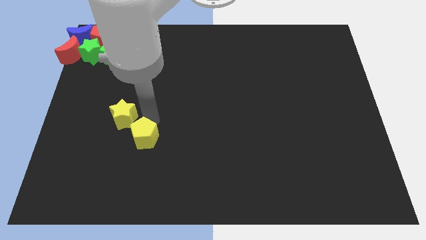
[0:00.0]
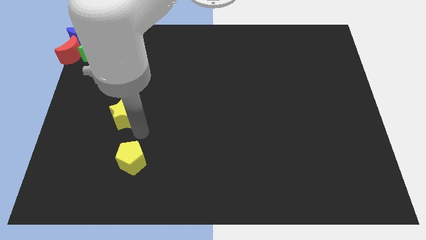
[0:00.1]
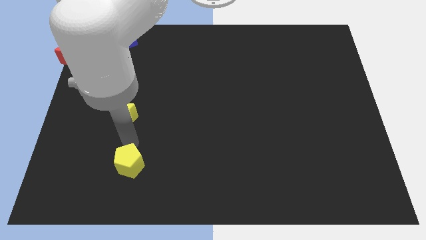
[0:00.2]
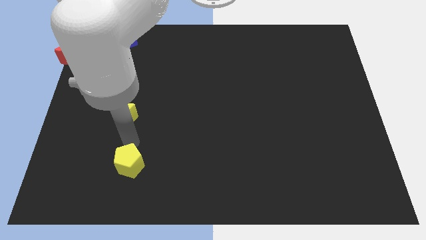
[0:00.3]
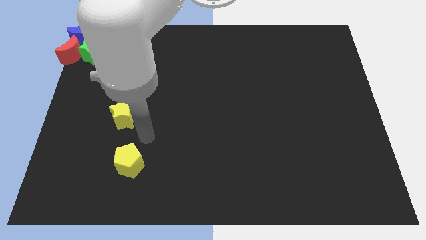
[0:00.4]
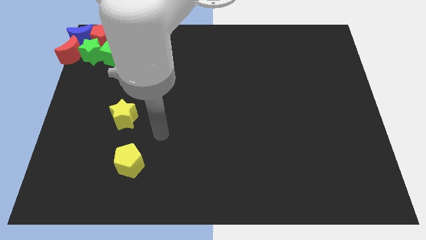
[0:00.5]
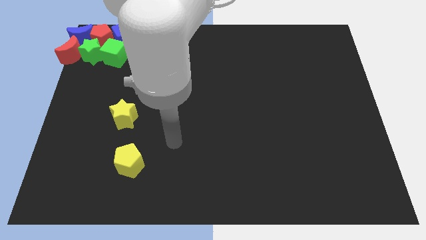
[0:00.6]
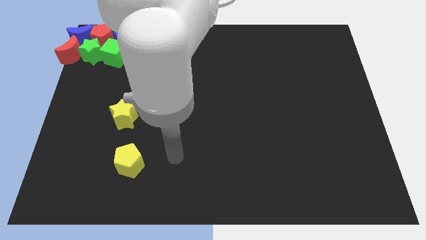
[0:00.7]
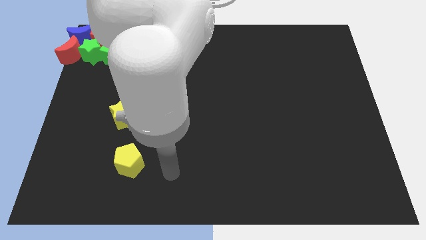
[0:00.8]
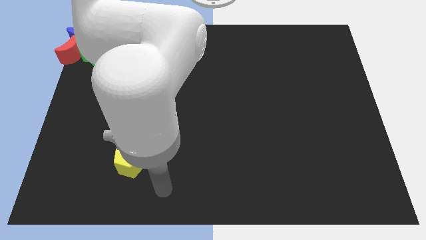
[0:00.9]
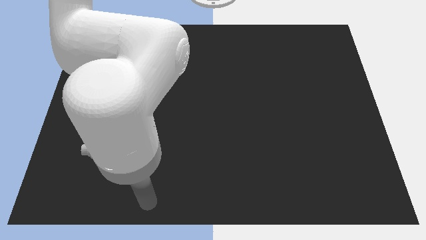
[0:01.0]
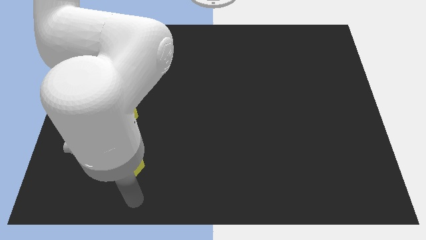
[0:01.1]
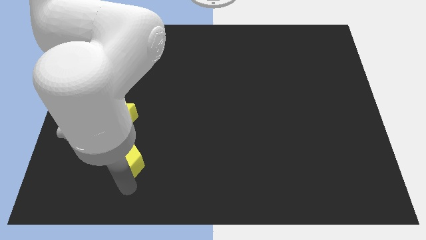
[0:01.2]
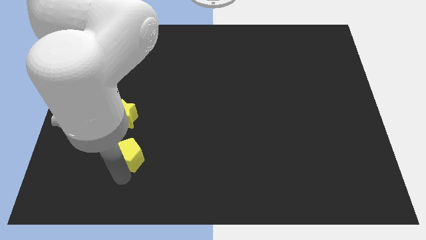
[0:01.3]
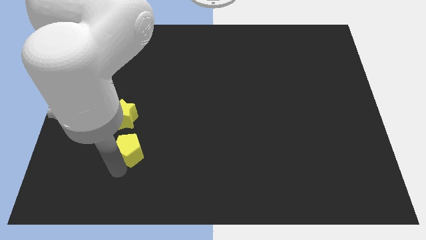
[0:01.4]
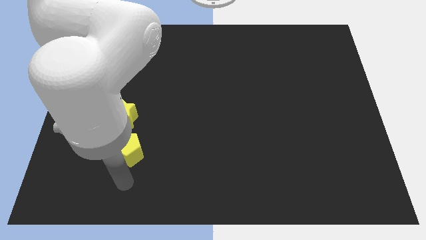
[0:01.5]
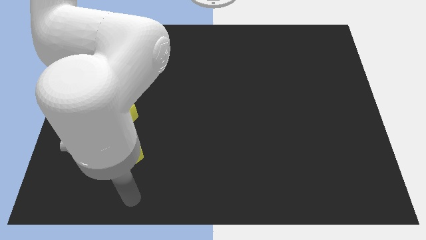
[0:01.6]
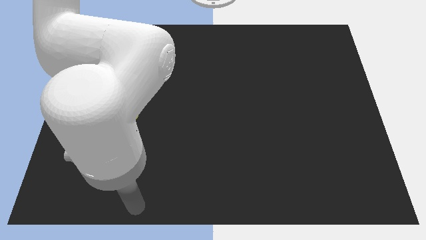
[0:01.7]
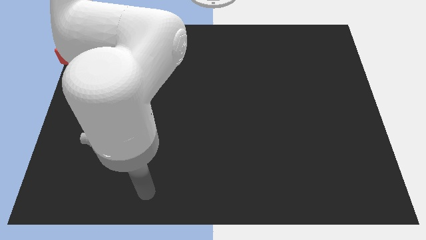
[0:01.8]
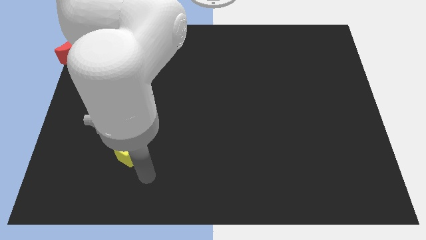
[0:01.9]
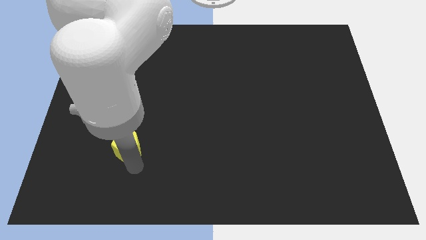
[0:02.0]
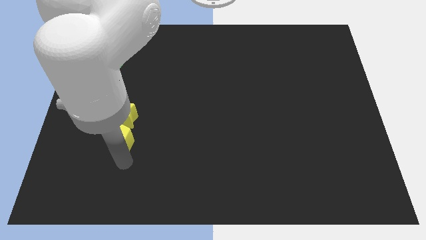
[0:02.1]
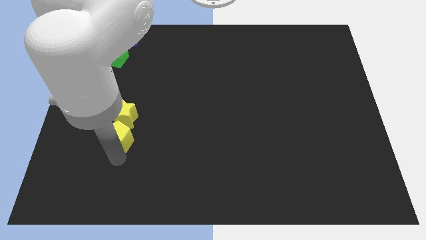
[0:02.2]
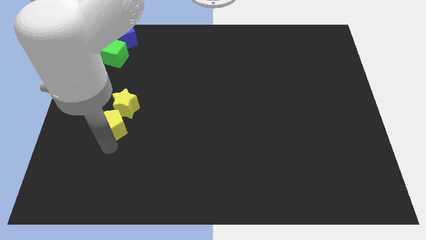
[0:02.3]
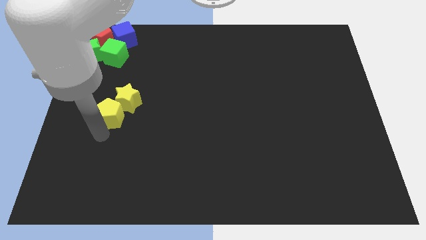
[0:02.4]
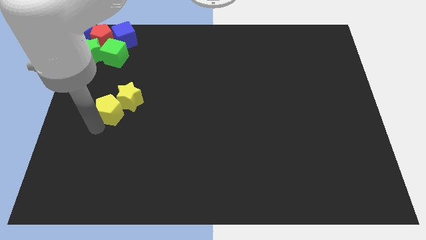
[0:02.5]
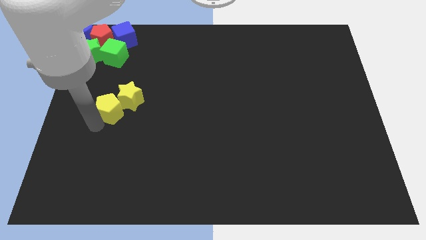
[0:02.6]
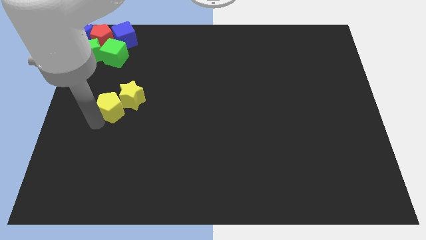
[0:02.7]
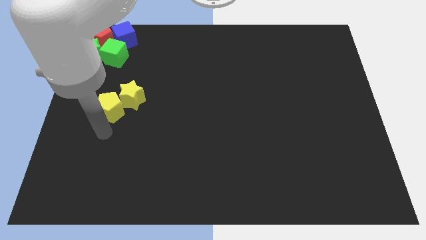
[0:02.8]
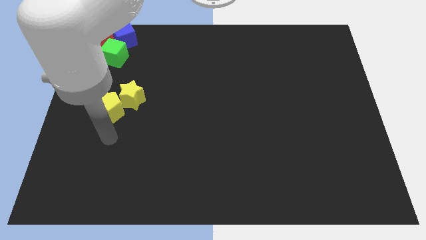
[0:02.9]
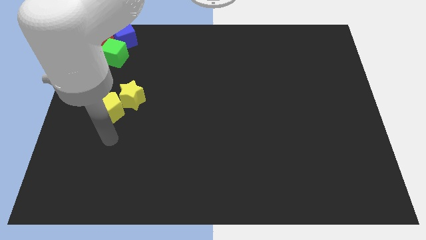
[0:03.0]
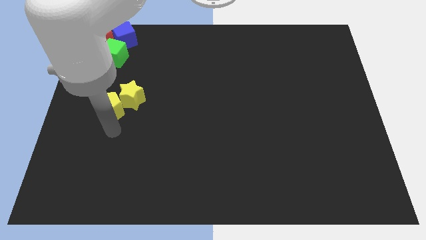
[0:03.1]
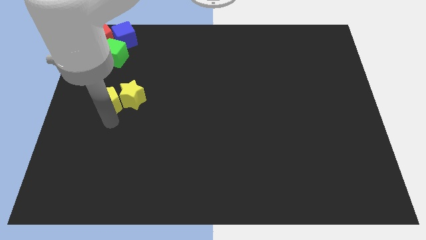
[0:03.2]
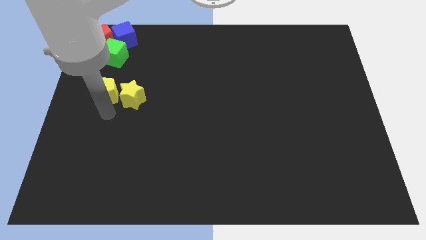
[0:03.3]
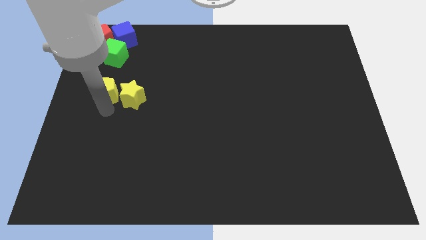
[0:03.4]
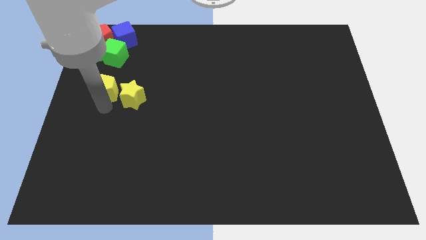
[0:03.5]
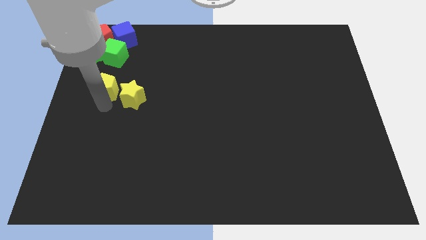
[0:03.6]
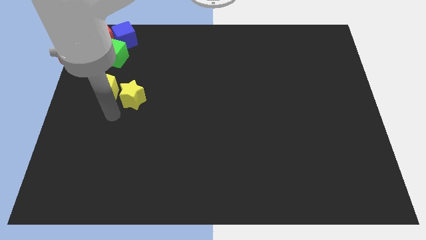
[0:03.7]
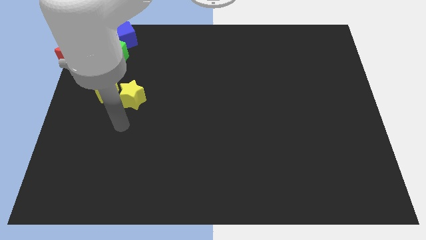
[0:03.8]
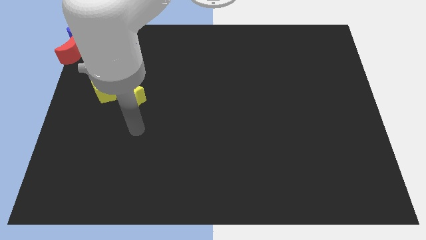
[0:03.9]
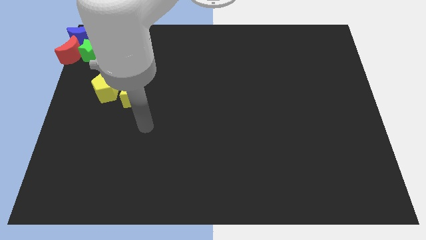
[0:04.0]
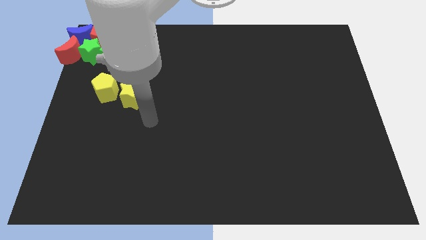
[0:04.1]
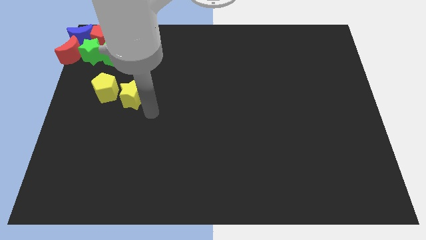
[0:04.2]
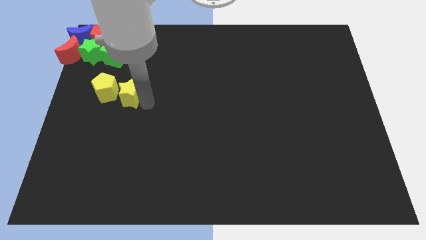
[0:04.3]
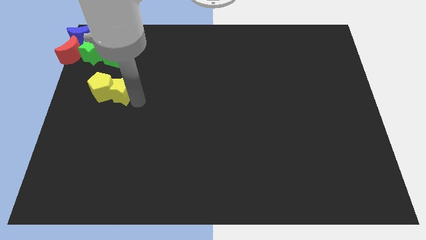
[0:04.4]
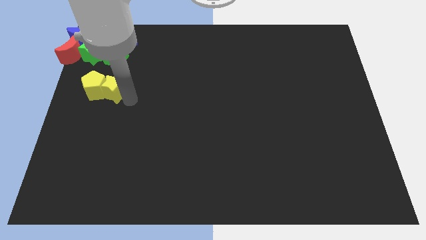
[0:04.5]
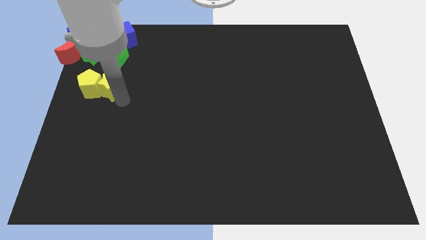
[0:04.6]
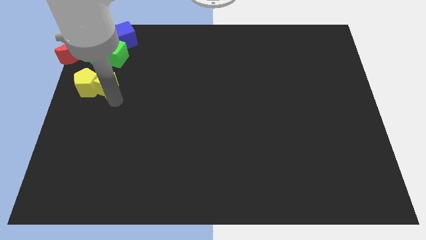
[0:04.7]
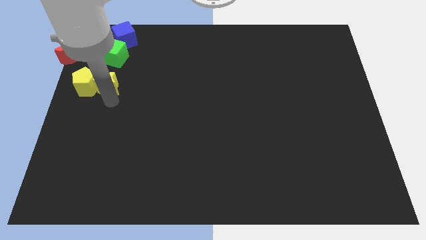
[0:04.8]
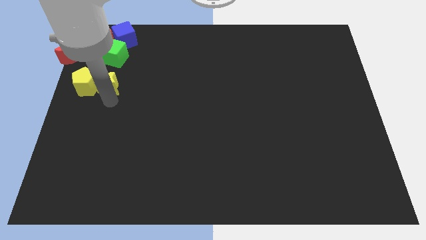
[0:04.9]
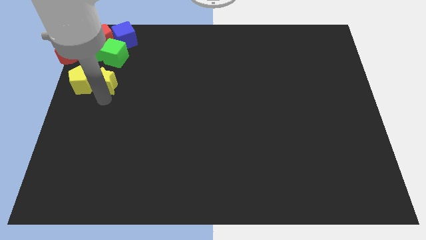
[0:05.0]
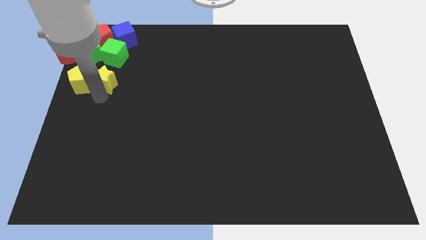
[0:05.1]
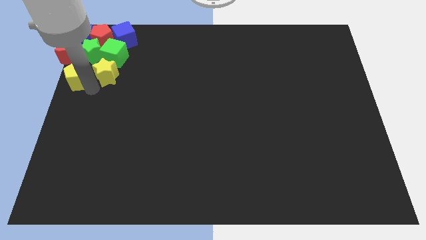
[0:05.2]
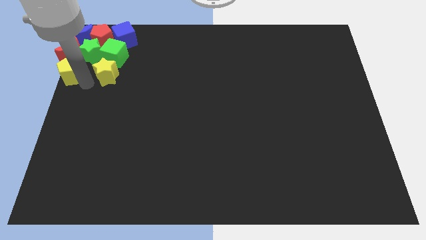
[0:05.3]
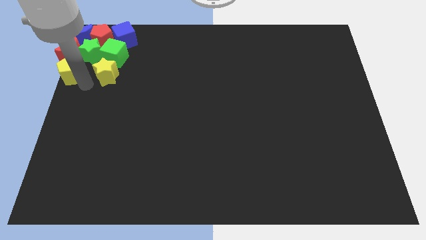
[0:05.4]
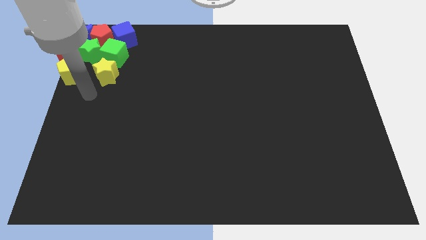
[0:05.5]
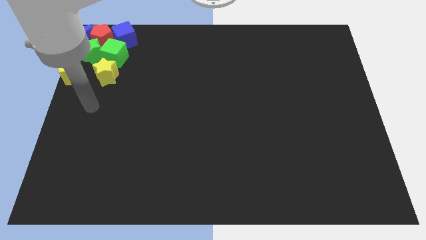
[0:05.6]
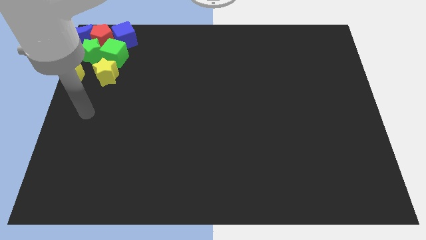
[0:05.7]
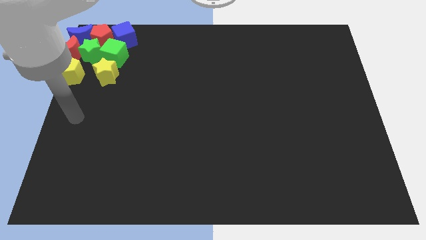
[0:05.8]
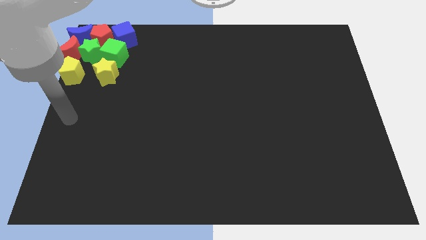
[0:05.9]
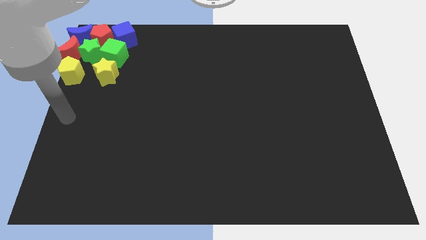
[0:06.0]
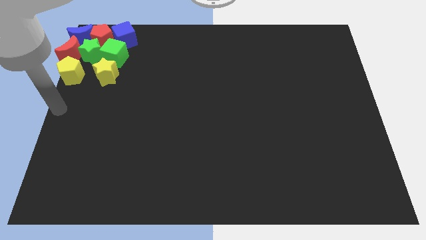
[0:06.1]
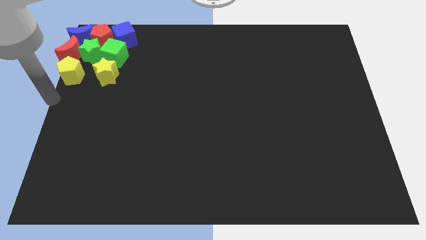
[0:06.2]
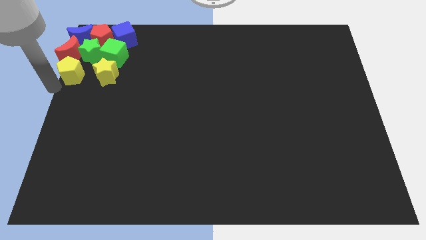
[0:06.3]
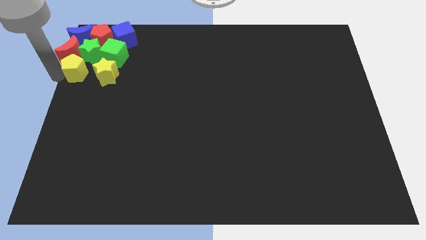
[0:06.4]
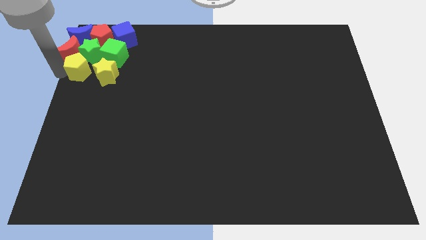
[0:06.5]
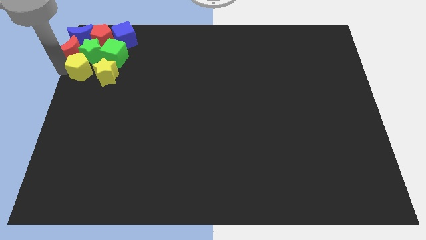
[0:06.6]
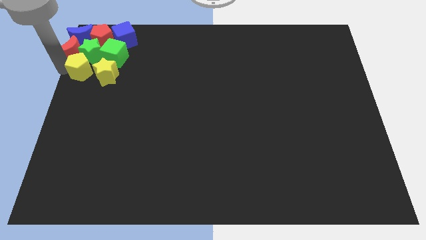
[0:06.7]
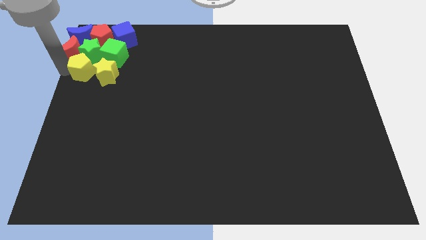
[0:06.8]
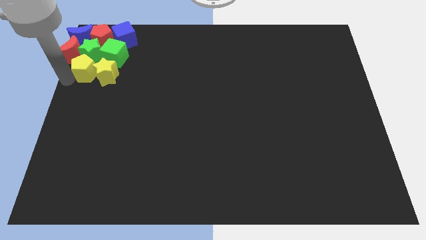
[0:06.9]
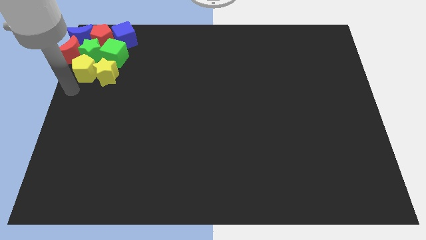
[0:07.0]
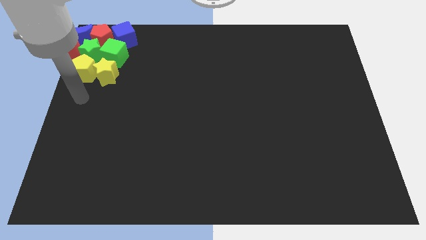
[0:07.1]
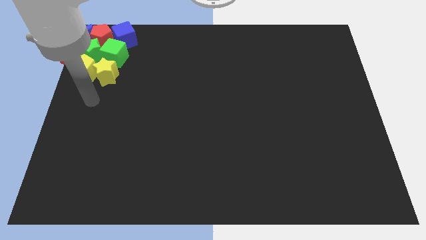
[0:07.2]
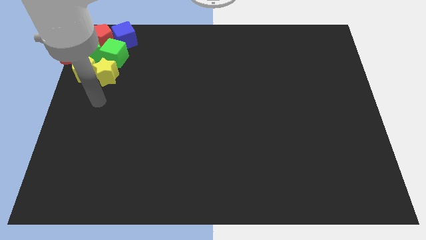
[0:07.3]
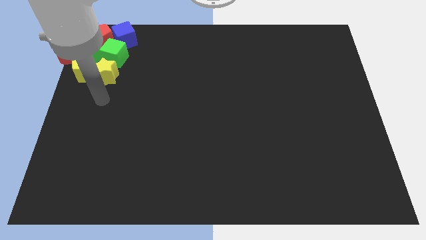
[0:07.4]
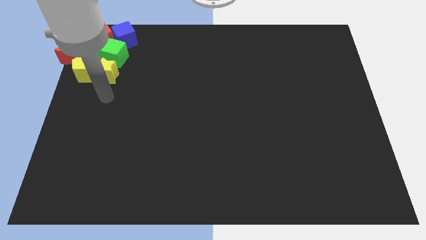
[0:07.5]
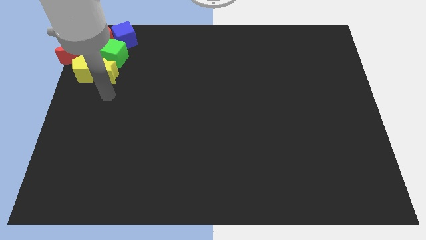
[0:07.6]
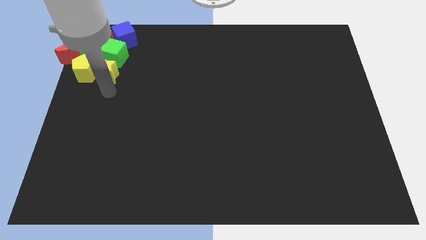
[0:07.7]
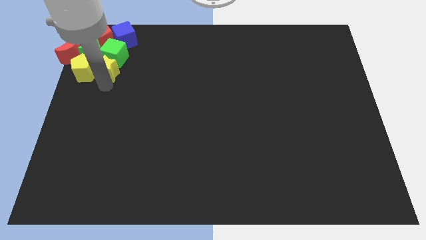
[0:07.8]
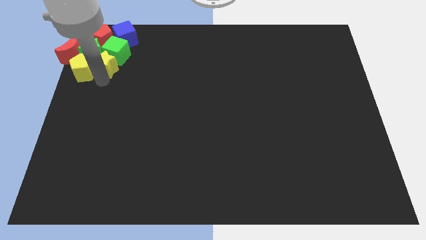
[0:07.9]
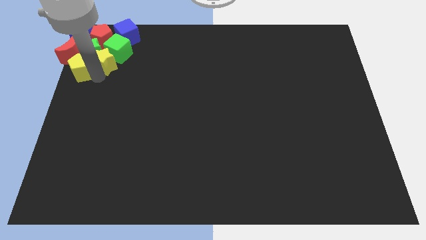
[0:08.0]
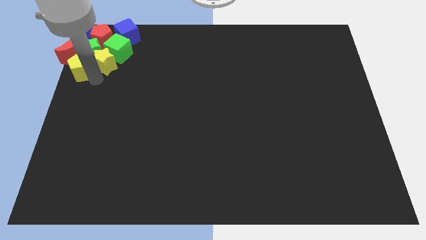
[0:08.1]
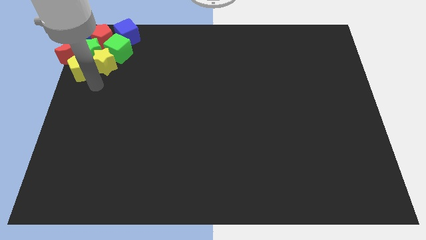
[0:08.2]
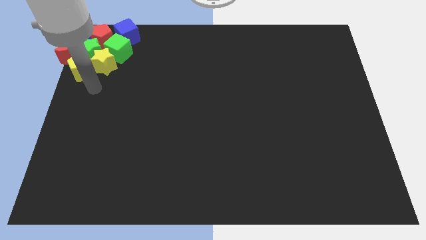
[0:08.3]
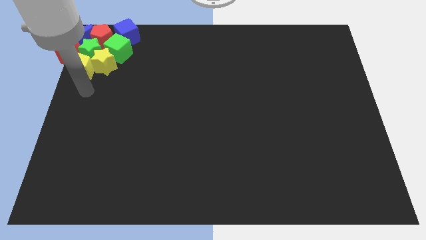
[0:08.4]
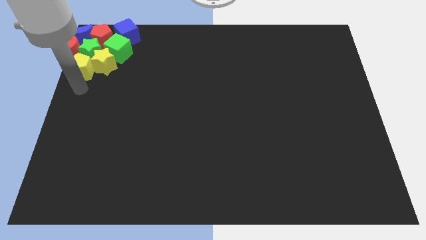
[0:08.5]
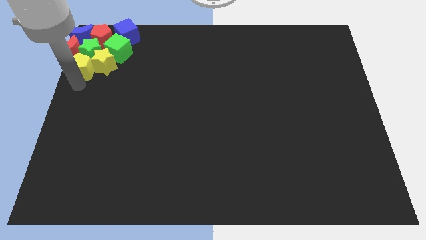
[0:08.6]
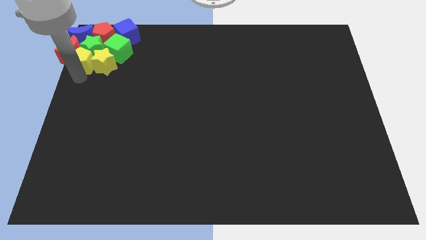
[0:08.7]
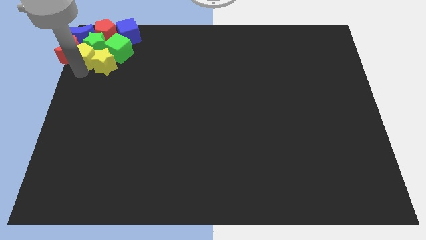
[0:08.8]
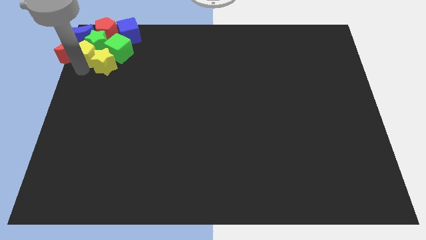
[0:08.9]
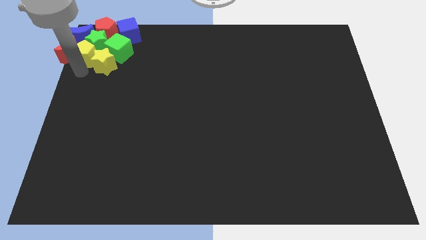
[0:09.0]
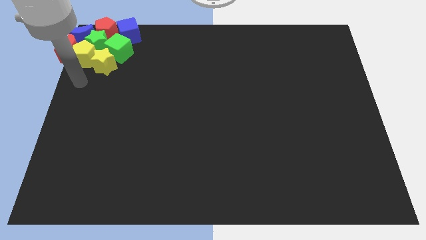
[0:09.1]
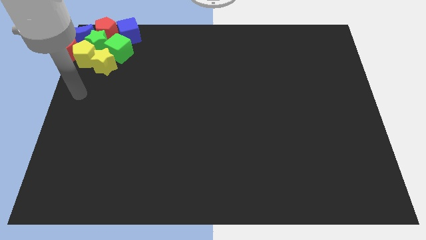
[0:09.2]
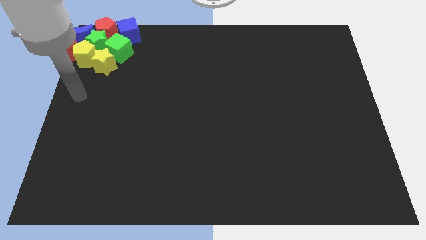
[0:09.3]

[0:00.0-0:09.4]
move the yellow star to the top left of the board along with yellow pentagon
